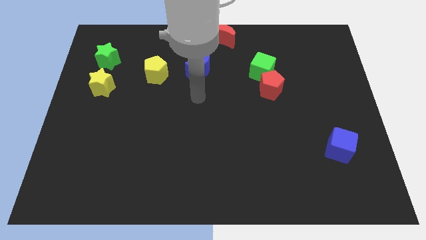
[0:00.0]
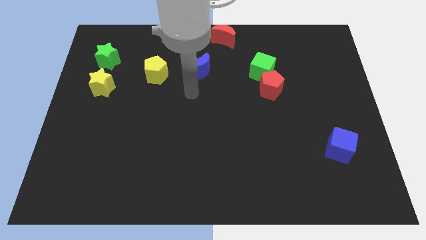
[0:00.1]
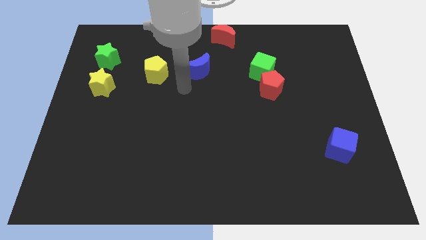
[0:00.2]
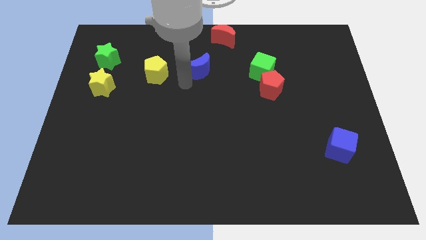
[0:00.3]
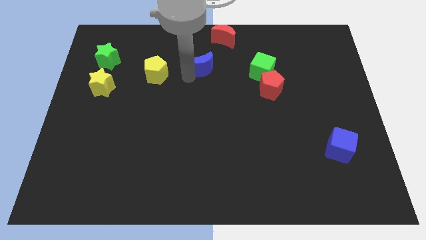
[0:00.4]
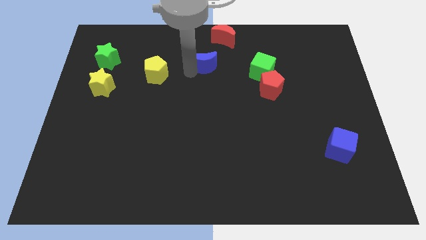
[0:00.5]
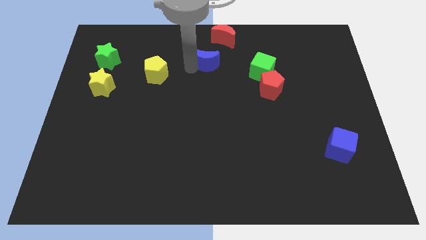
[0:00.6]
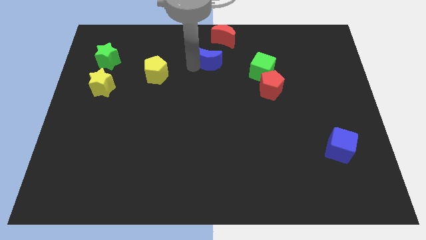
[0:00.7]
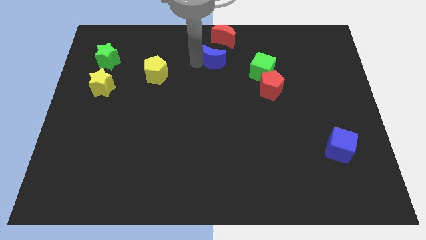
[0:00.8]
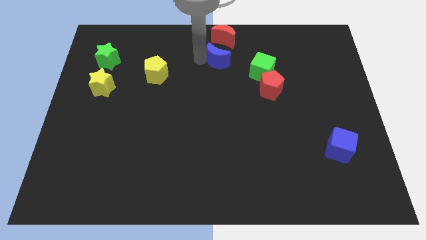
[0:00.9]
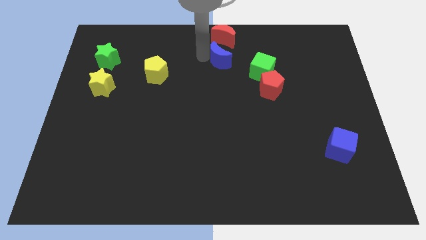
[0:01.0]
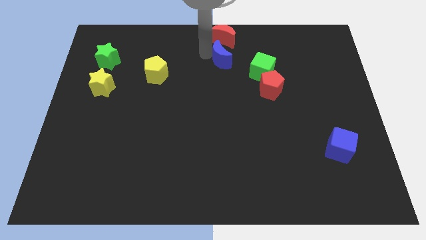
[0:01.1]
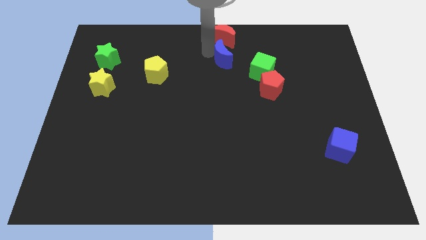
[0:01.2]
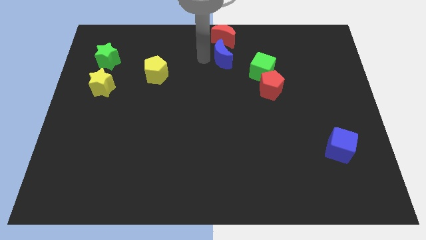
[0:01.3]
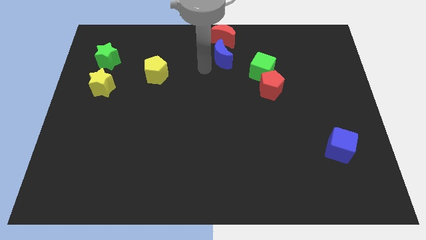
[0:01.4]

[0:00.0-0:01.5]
move the blue crescent below the red crescent

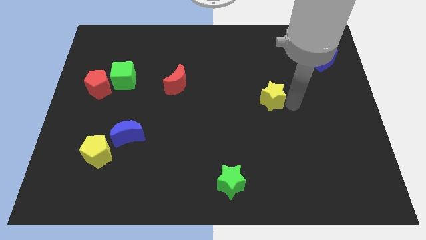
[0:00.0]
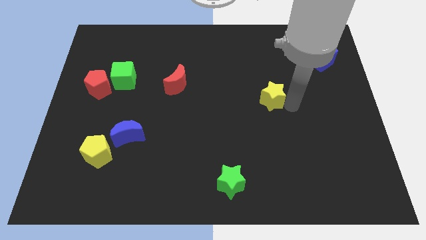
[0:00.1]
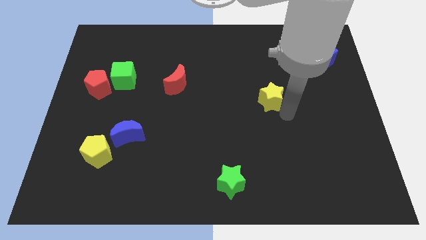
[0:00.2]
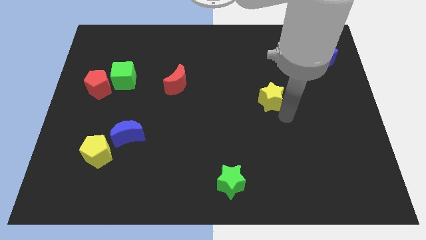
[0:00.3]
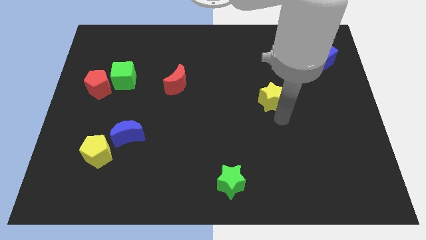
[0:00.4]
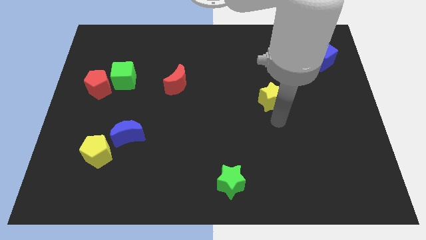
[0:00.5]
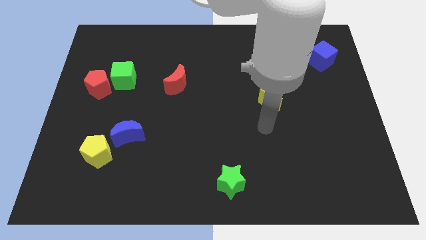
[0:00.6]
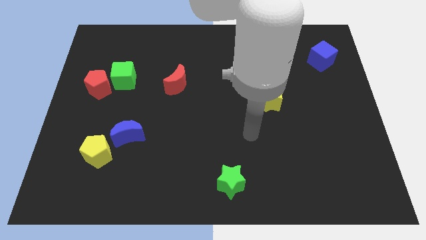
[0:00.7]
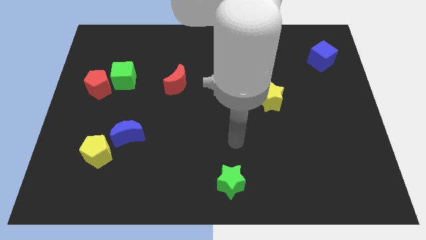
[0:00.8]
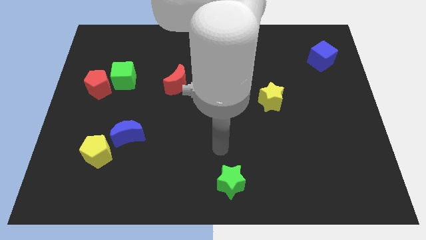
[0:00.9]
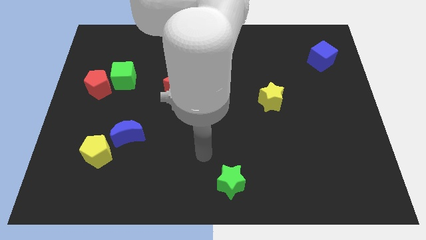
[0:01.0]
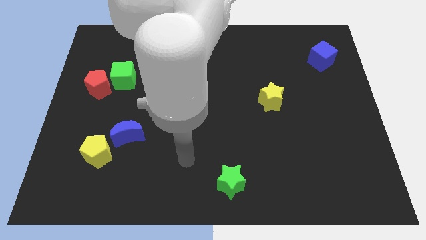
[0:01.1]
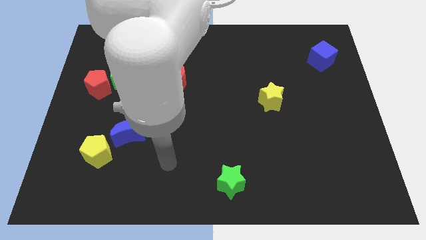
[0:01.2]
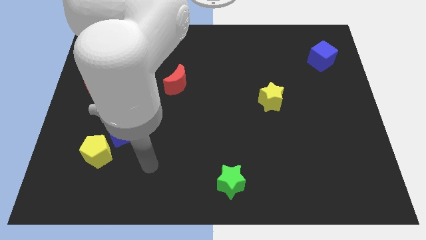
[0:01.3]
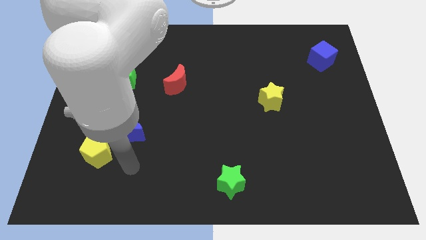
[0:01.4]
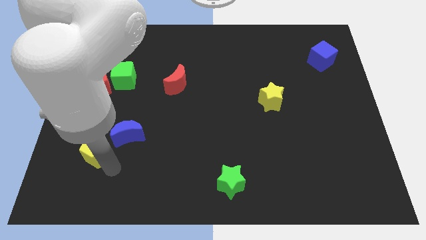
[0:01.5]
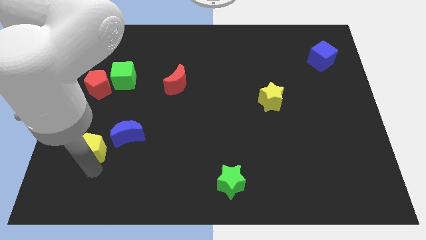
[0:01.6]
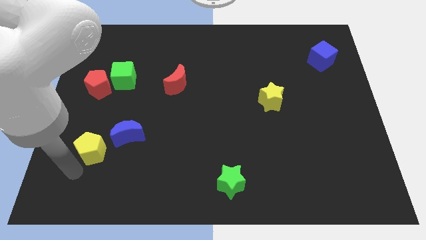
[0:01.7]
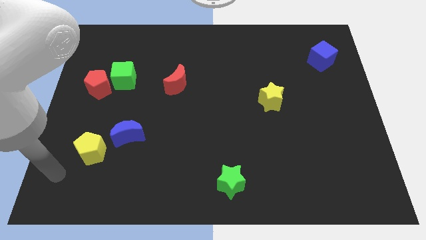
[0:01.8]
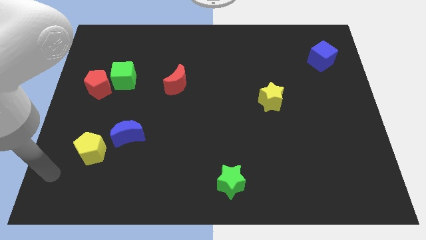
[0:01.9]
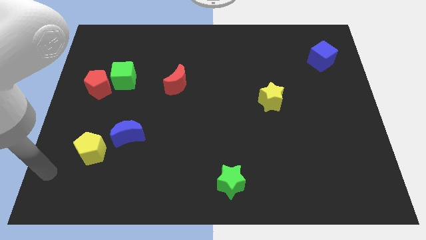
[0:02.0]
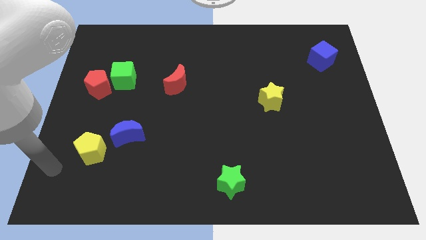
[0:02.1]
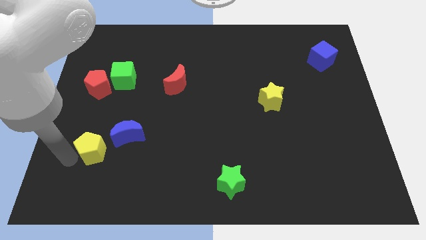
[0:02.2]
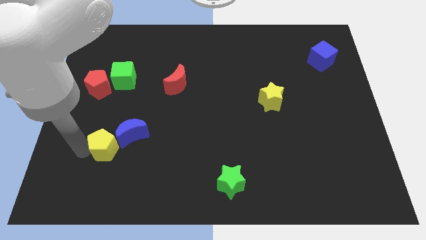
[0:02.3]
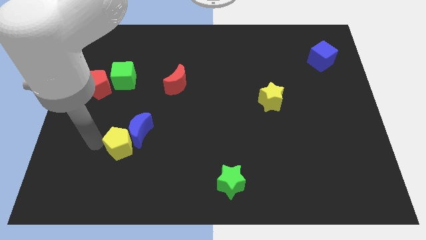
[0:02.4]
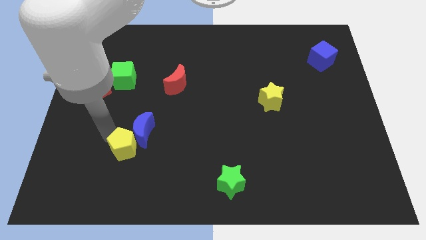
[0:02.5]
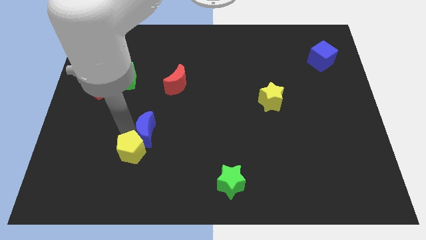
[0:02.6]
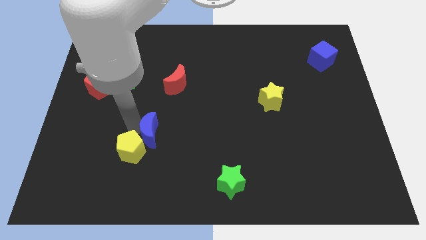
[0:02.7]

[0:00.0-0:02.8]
push yellow pentagon vertically below green cube

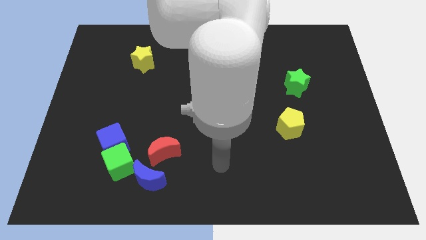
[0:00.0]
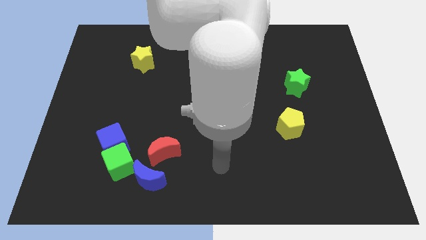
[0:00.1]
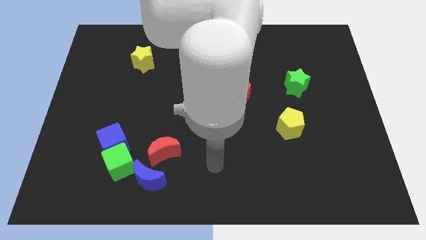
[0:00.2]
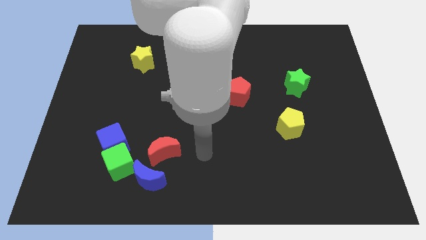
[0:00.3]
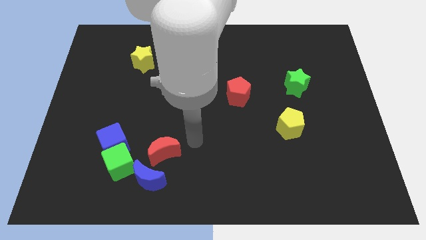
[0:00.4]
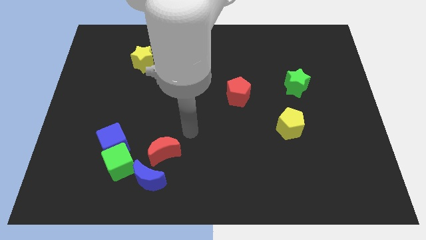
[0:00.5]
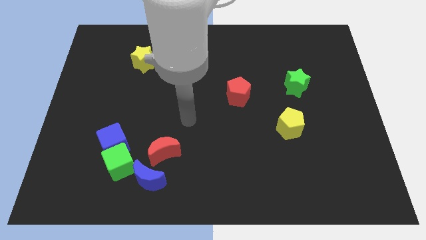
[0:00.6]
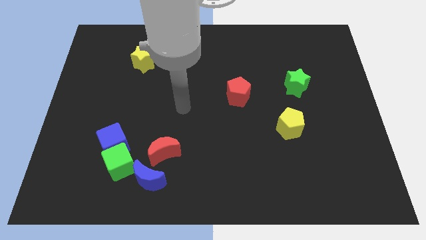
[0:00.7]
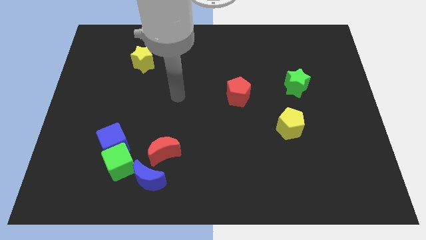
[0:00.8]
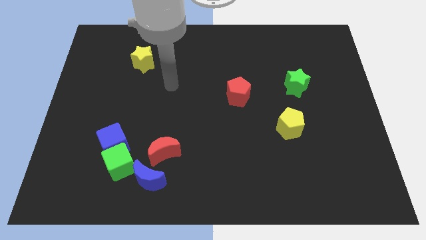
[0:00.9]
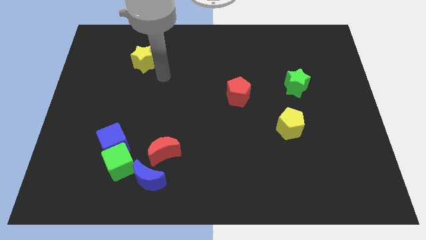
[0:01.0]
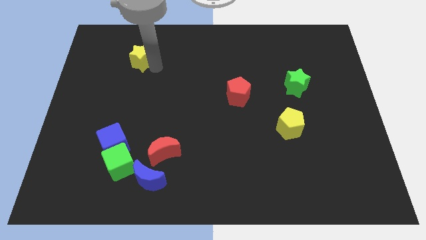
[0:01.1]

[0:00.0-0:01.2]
tap the yellow star

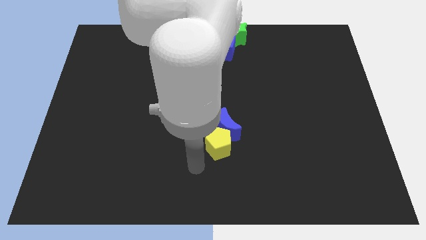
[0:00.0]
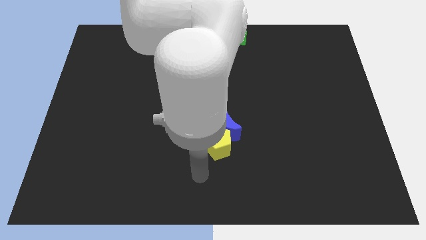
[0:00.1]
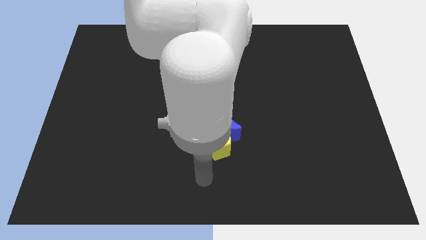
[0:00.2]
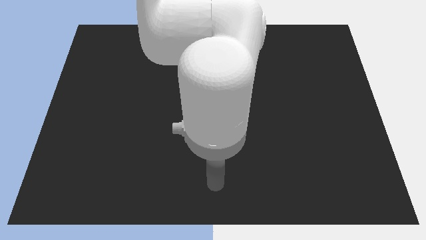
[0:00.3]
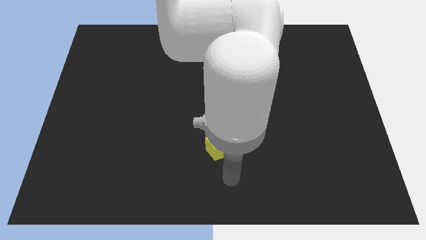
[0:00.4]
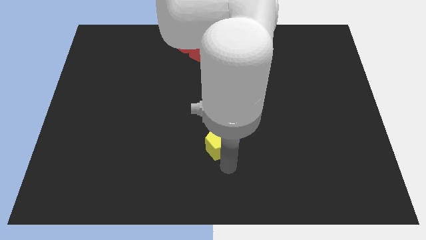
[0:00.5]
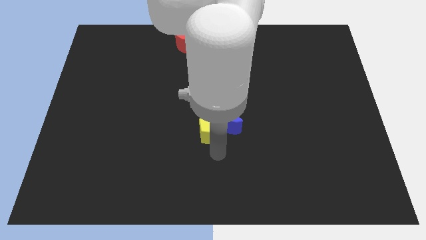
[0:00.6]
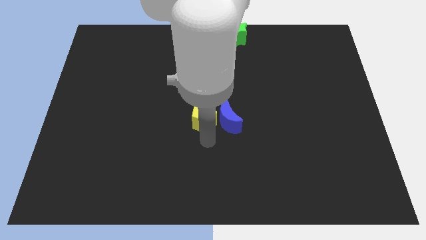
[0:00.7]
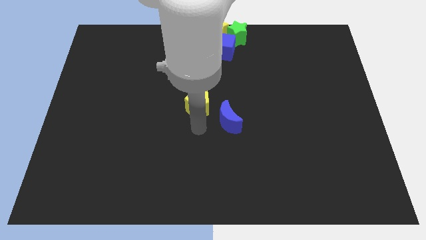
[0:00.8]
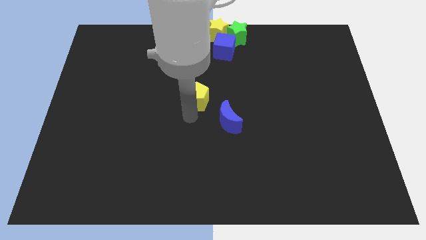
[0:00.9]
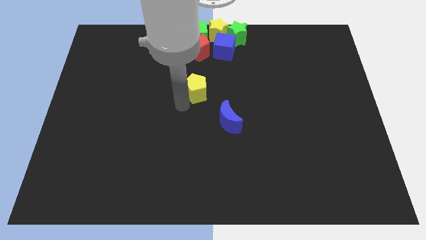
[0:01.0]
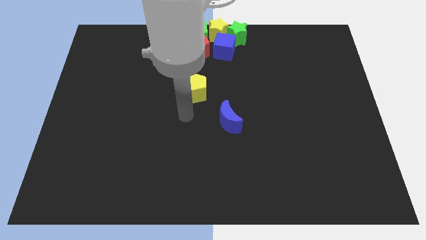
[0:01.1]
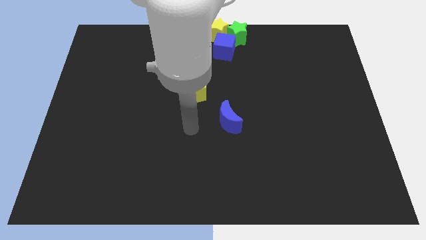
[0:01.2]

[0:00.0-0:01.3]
separate the yellow pentagon from the blue crescent

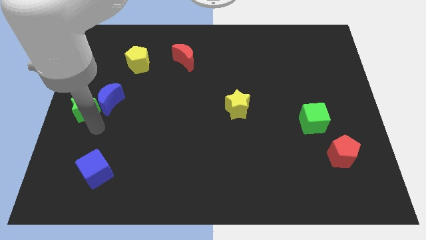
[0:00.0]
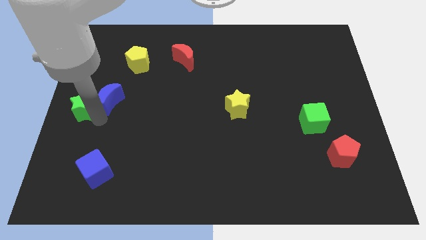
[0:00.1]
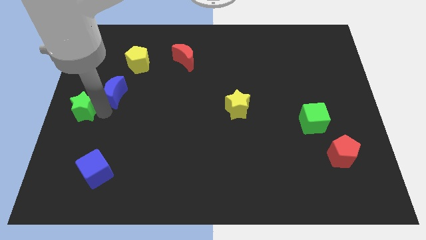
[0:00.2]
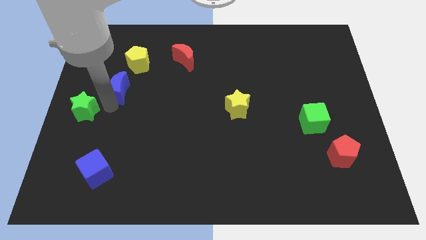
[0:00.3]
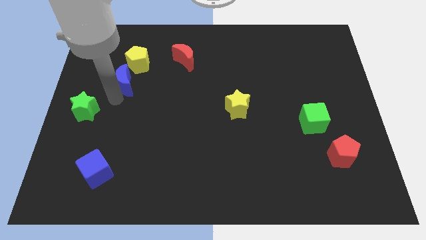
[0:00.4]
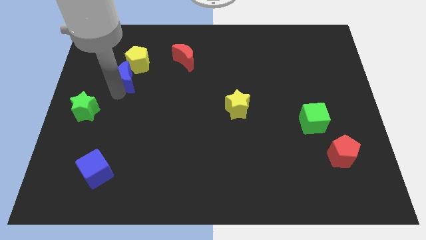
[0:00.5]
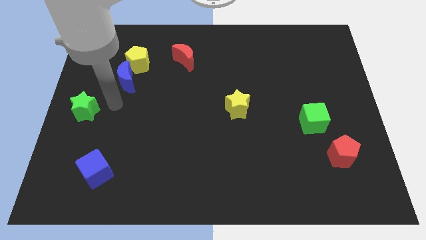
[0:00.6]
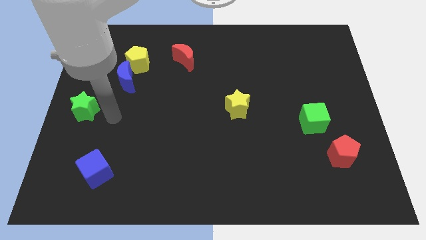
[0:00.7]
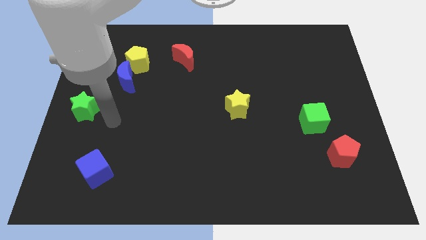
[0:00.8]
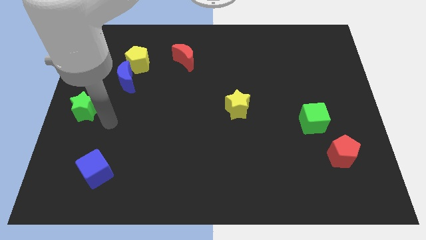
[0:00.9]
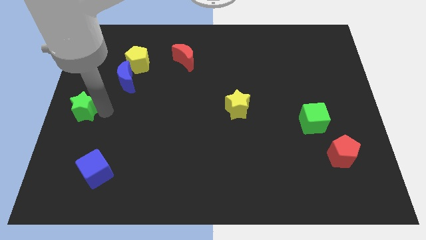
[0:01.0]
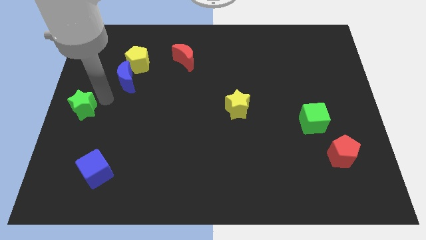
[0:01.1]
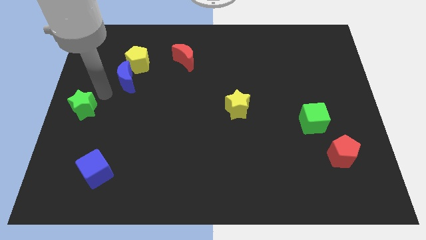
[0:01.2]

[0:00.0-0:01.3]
place the blue crescent below the yellow pentagon

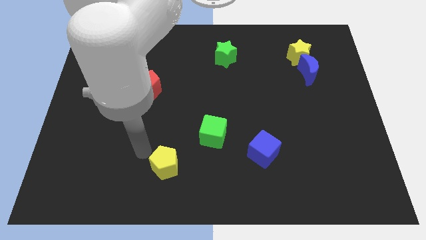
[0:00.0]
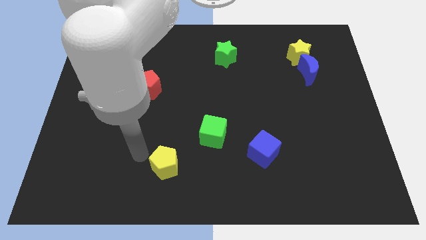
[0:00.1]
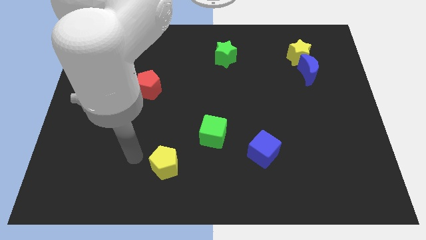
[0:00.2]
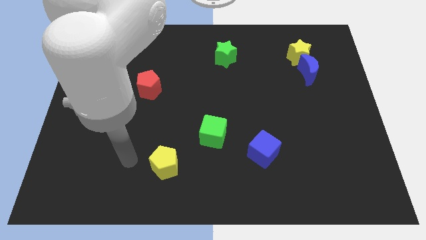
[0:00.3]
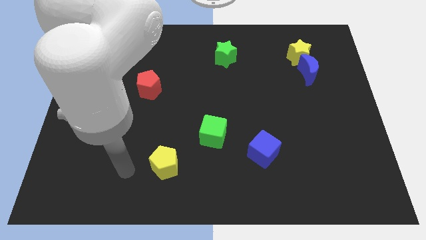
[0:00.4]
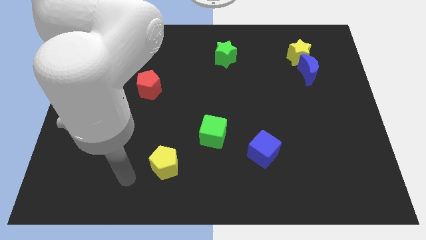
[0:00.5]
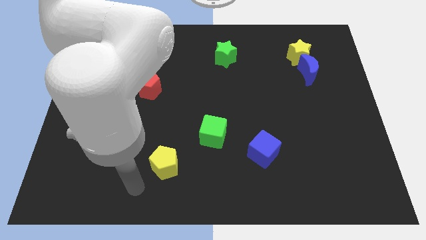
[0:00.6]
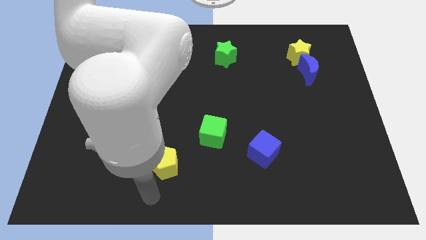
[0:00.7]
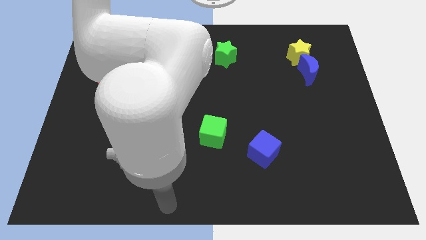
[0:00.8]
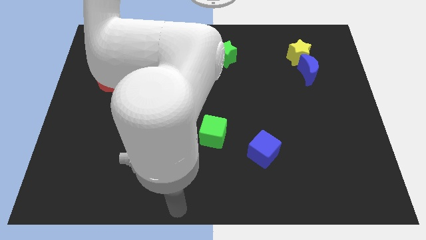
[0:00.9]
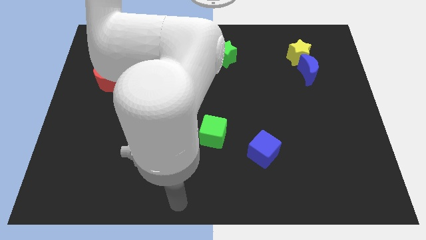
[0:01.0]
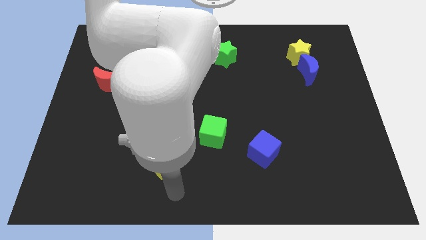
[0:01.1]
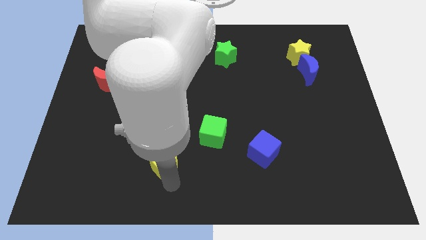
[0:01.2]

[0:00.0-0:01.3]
move your hand on the bottom side of the yellow pentagon
